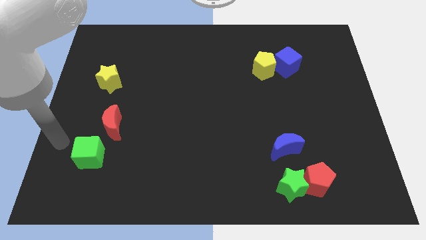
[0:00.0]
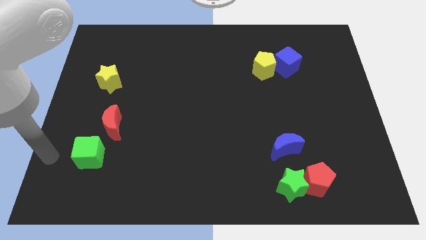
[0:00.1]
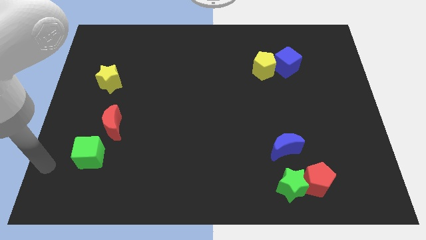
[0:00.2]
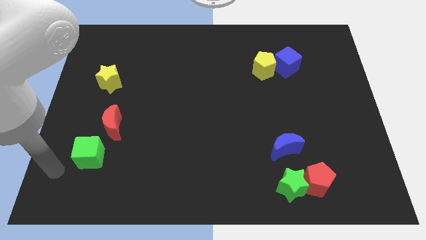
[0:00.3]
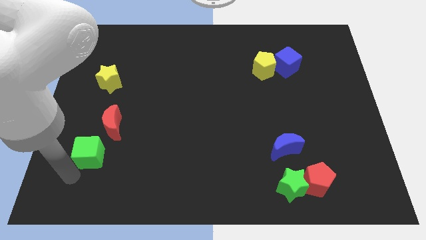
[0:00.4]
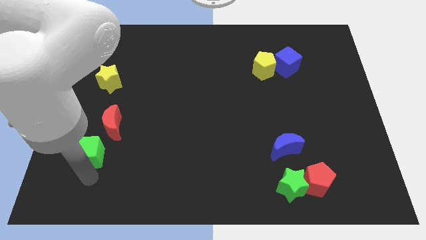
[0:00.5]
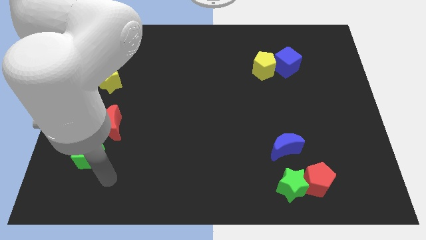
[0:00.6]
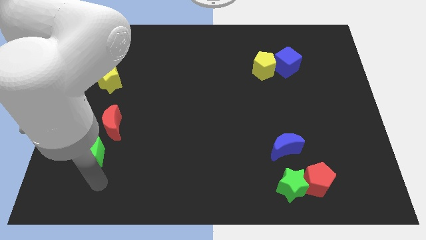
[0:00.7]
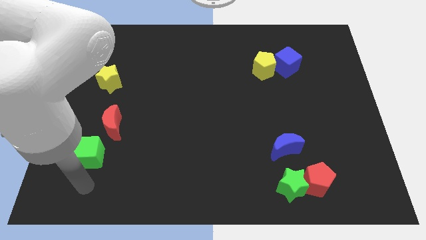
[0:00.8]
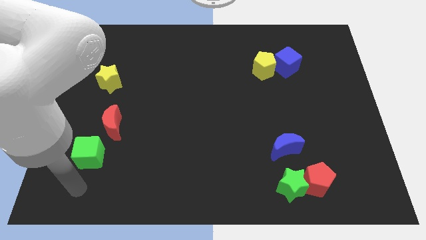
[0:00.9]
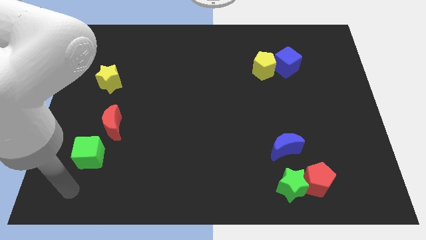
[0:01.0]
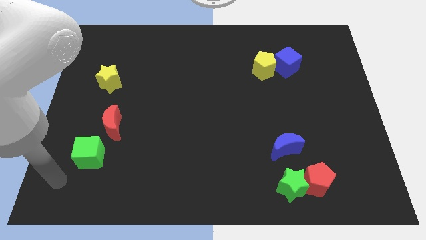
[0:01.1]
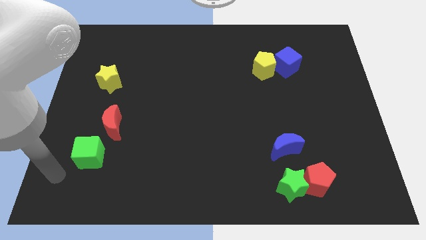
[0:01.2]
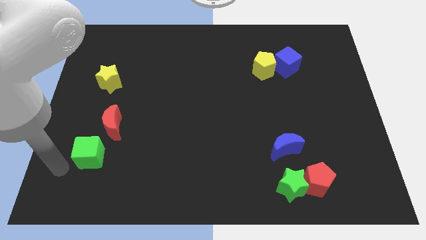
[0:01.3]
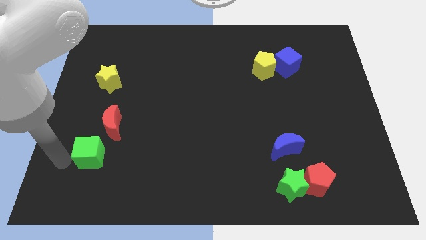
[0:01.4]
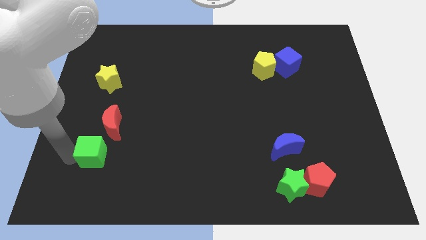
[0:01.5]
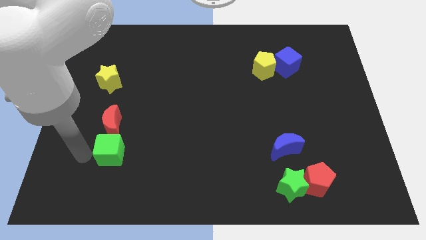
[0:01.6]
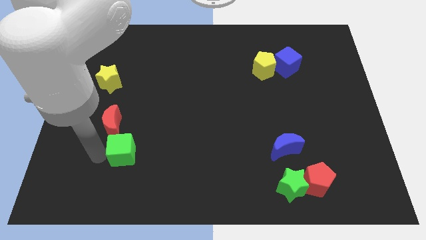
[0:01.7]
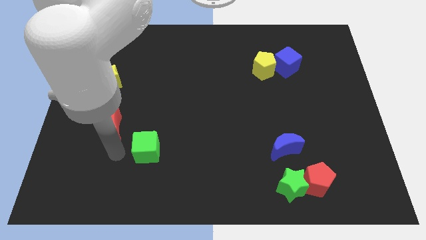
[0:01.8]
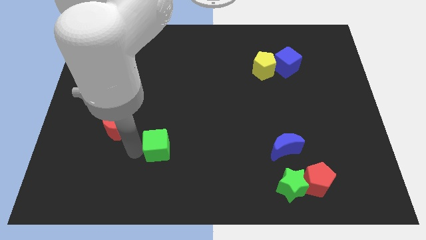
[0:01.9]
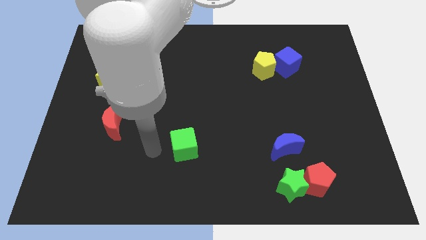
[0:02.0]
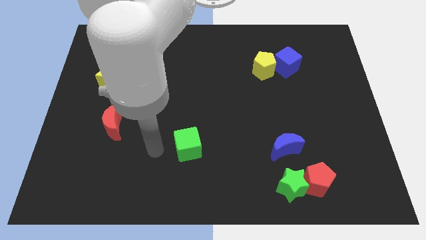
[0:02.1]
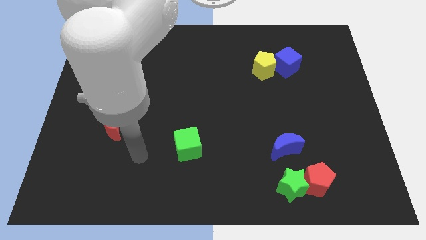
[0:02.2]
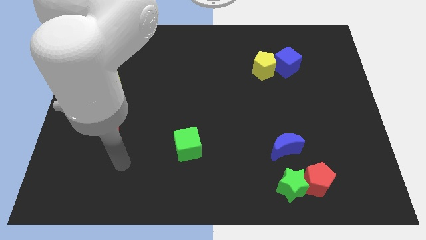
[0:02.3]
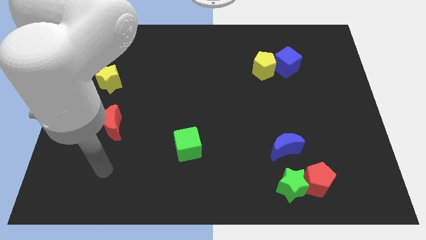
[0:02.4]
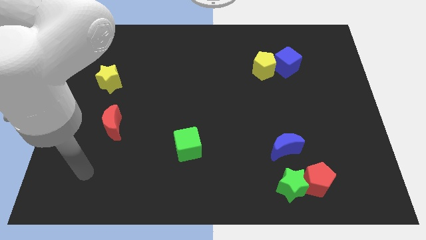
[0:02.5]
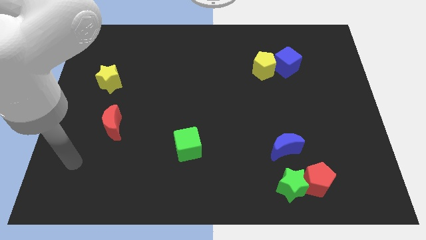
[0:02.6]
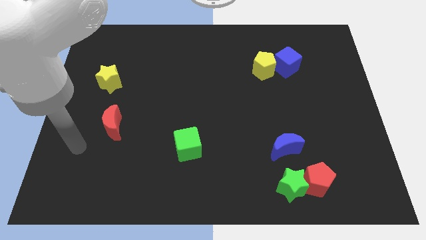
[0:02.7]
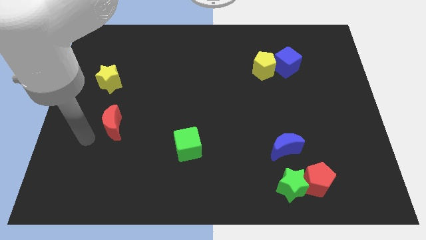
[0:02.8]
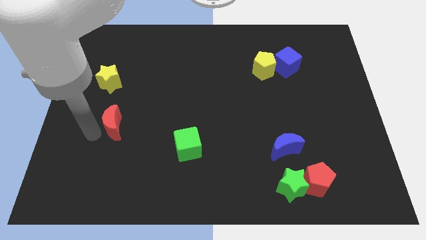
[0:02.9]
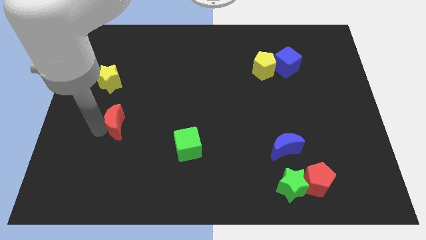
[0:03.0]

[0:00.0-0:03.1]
move the green cube to the right

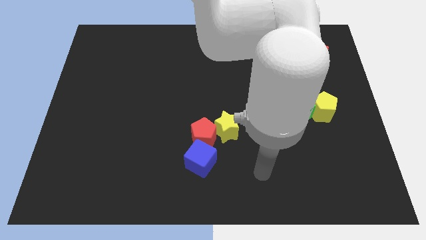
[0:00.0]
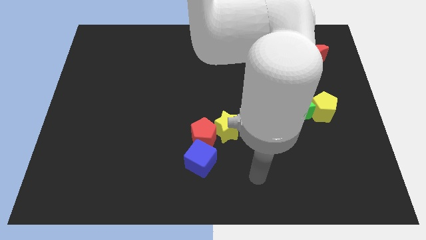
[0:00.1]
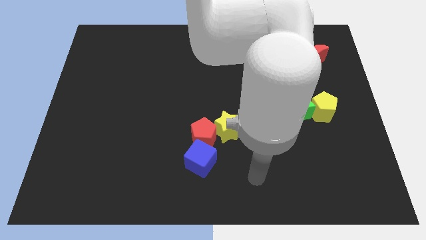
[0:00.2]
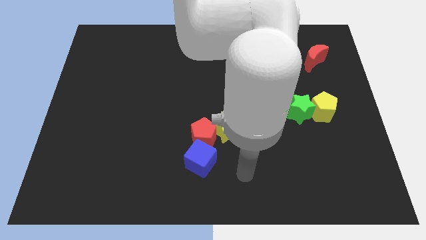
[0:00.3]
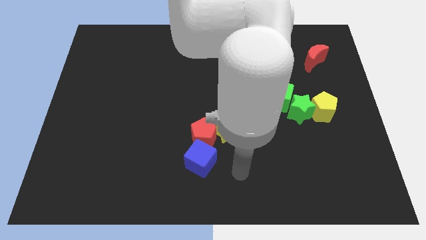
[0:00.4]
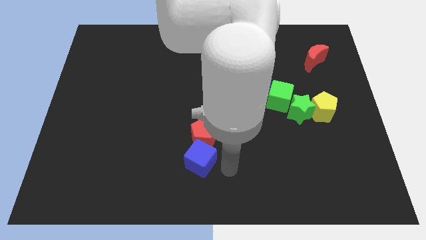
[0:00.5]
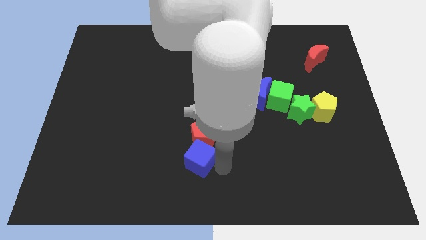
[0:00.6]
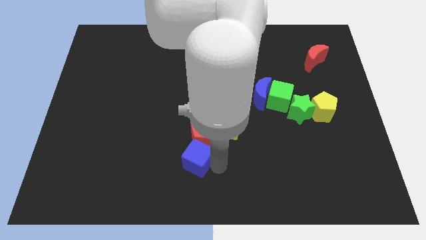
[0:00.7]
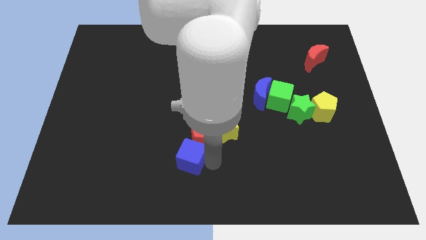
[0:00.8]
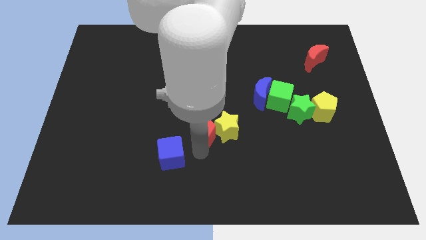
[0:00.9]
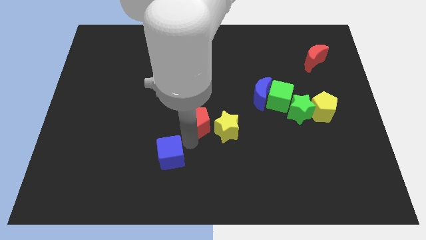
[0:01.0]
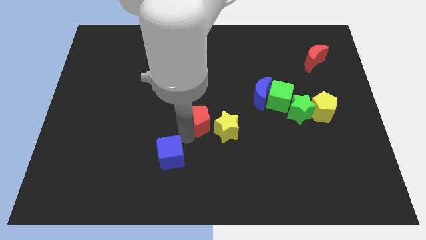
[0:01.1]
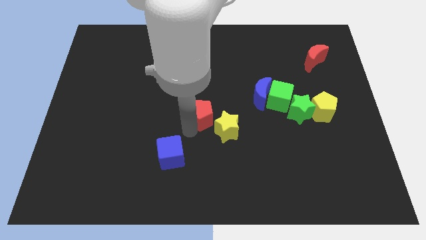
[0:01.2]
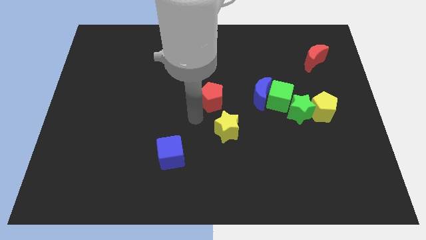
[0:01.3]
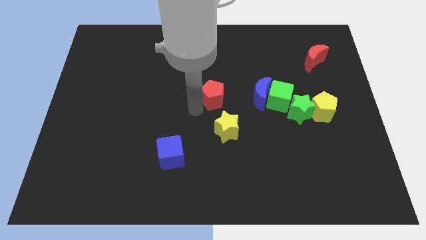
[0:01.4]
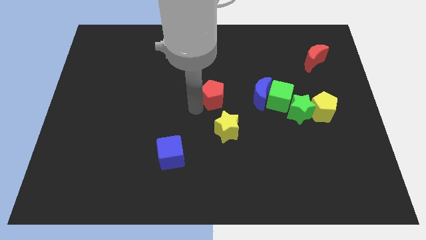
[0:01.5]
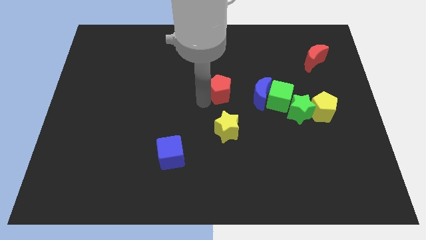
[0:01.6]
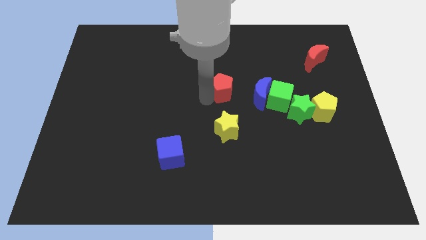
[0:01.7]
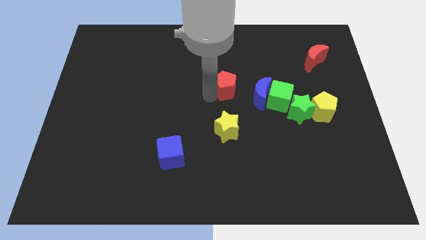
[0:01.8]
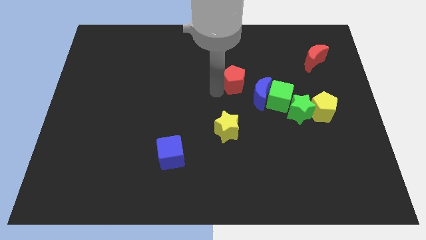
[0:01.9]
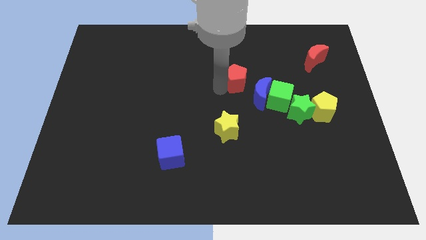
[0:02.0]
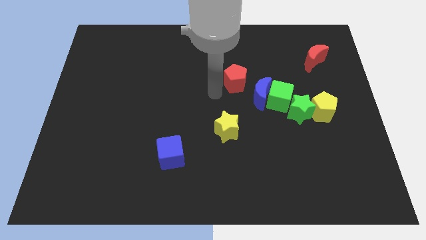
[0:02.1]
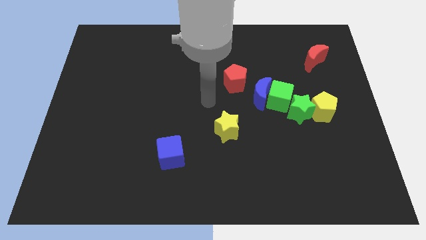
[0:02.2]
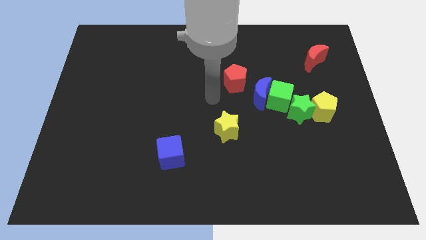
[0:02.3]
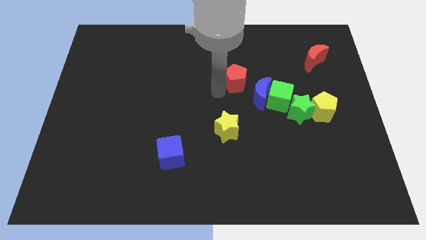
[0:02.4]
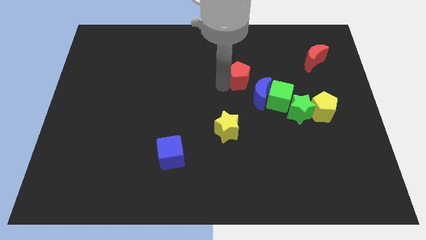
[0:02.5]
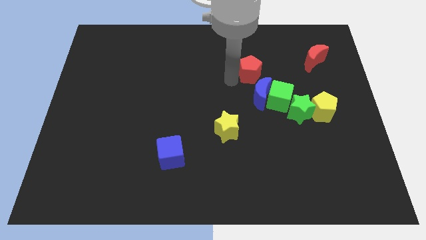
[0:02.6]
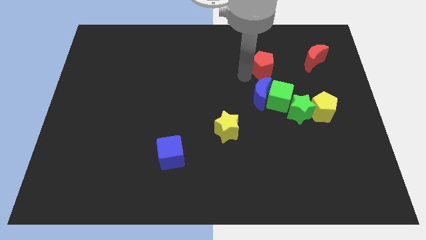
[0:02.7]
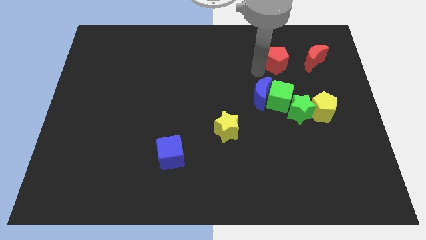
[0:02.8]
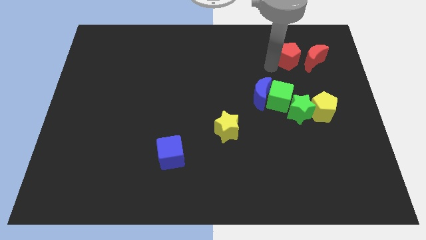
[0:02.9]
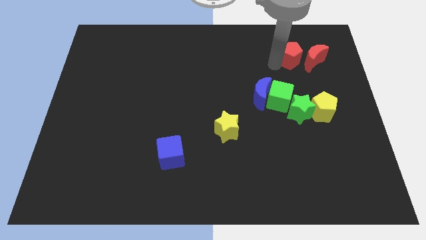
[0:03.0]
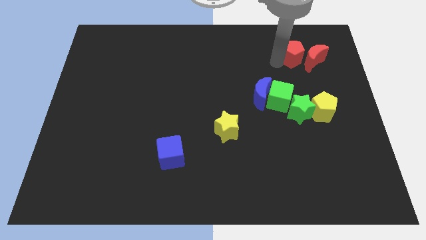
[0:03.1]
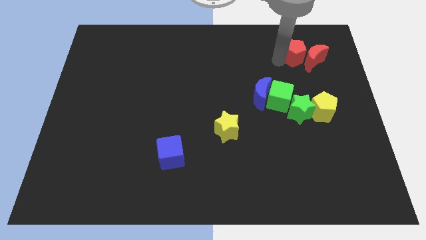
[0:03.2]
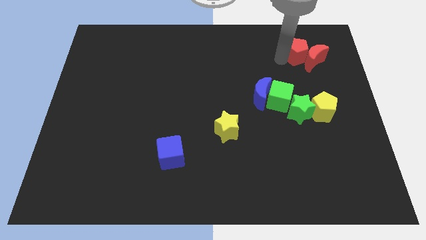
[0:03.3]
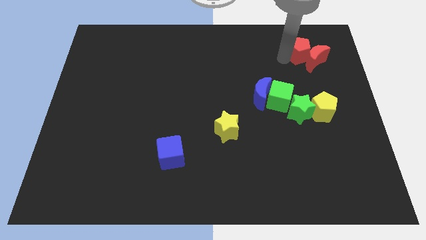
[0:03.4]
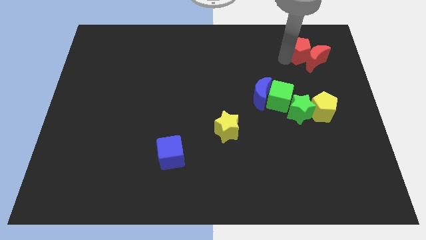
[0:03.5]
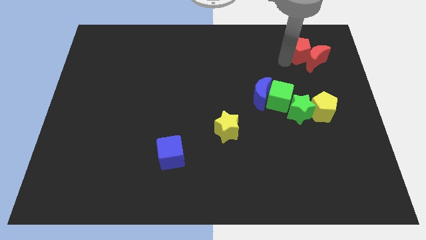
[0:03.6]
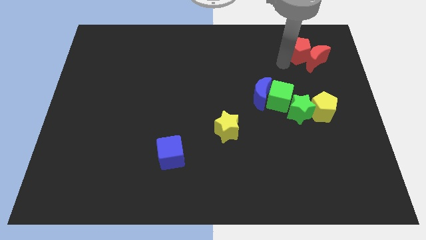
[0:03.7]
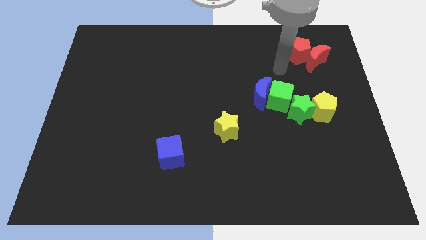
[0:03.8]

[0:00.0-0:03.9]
place the red pentagon above the green star

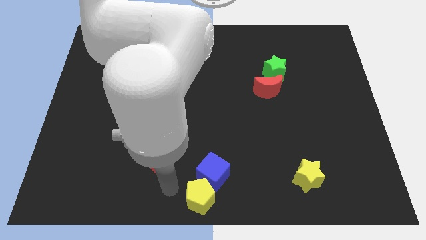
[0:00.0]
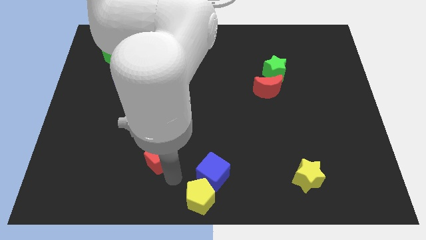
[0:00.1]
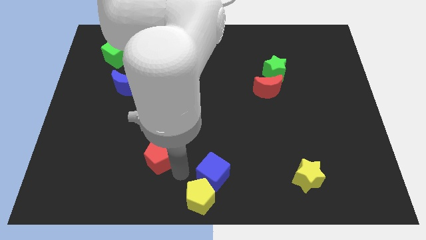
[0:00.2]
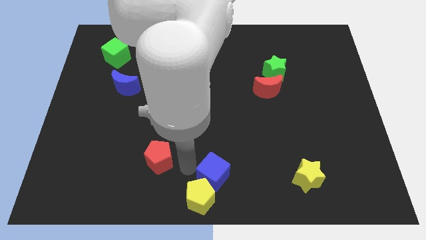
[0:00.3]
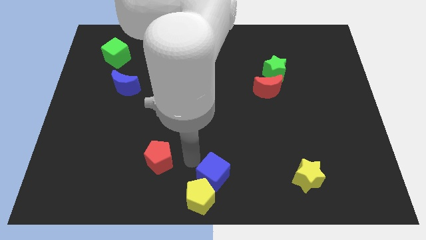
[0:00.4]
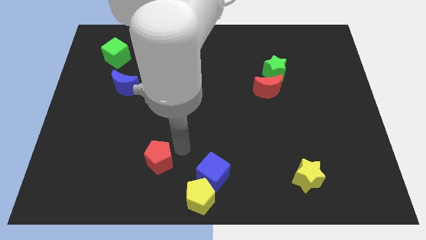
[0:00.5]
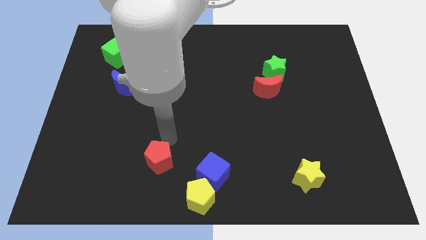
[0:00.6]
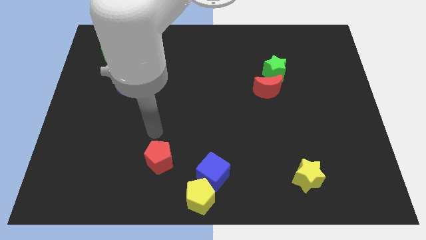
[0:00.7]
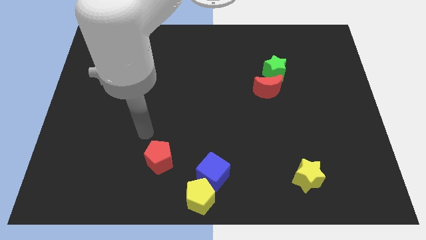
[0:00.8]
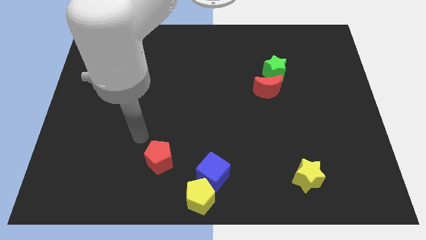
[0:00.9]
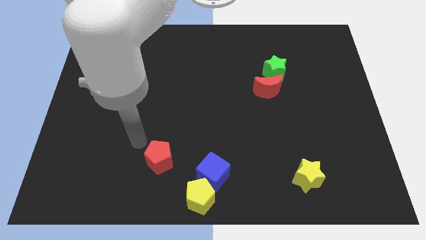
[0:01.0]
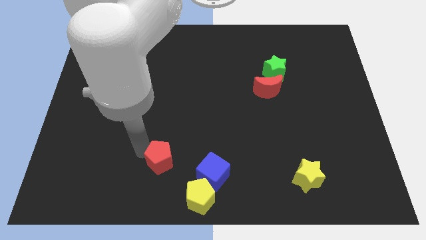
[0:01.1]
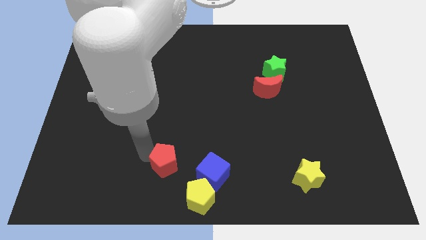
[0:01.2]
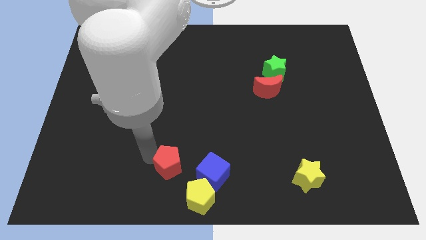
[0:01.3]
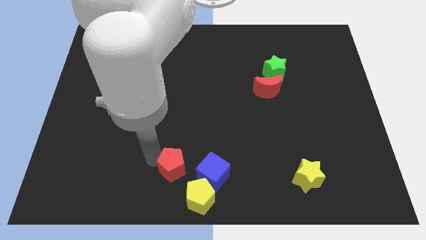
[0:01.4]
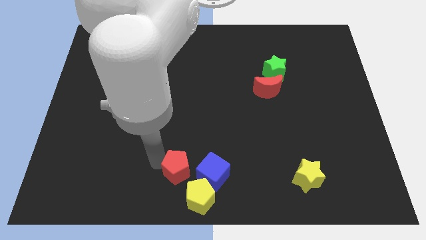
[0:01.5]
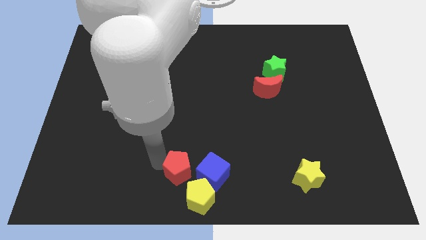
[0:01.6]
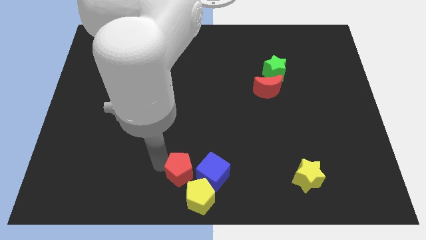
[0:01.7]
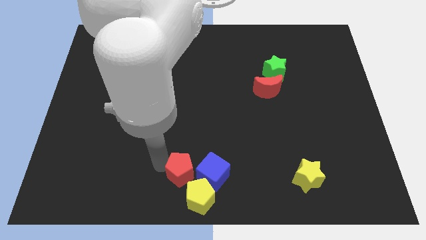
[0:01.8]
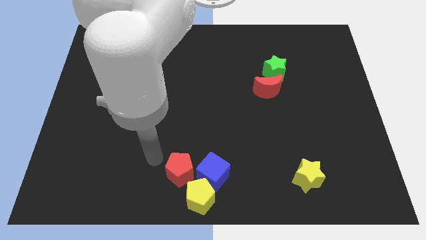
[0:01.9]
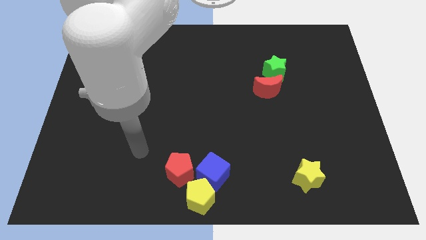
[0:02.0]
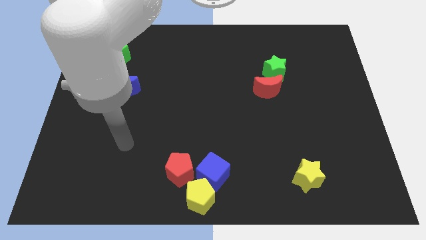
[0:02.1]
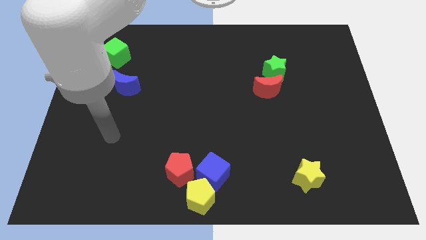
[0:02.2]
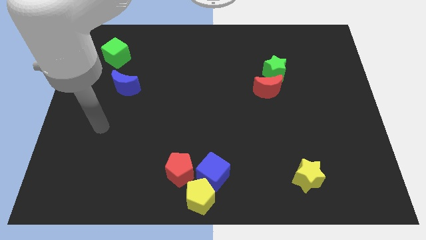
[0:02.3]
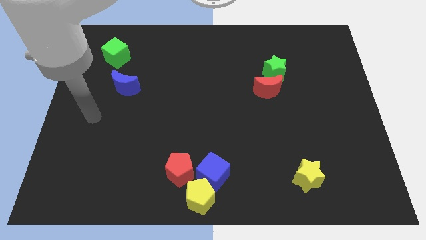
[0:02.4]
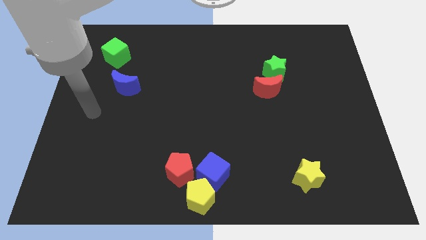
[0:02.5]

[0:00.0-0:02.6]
push red pentagon close to blue cube
